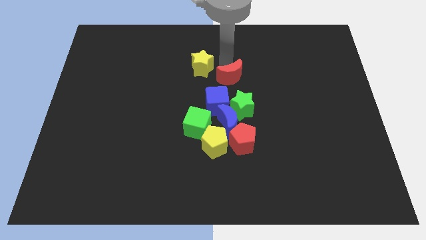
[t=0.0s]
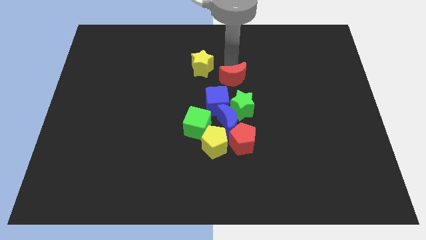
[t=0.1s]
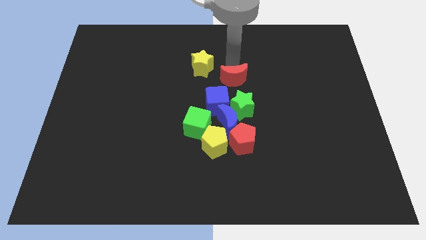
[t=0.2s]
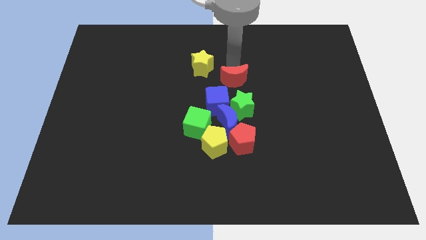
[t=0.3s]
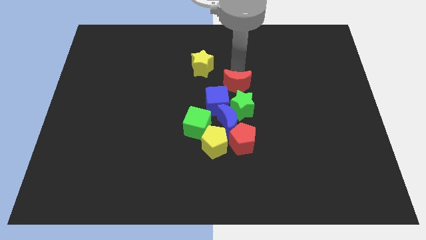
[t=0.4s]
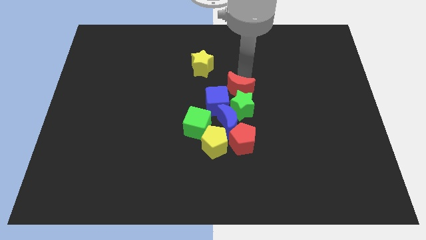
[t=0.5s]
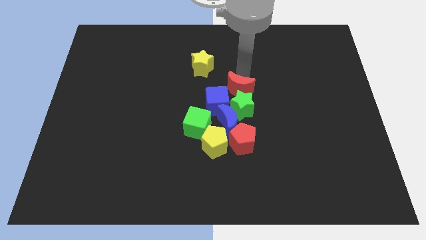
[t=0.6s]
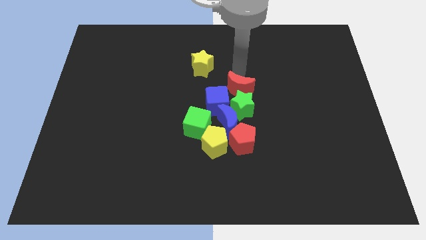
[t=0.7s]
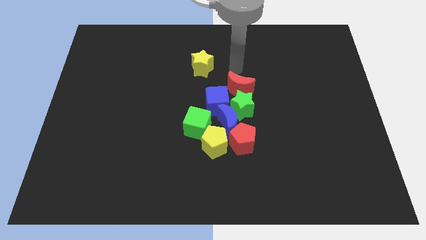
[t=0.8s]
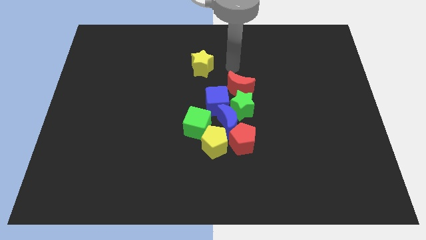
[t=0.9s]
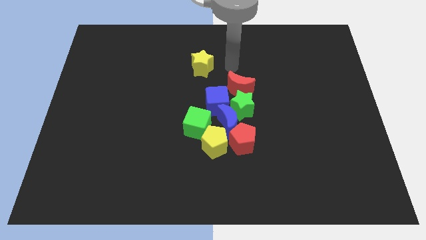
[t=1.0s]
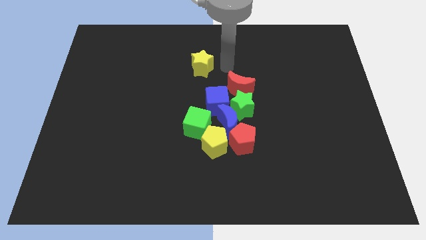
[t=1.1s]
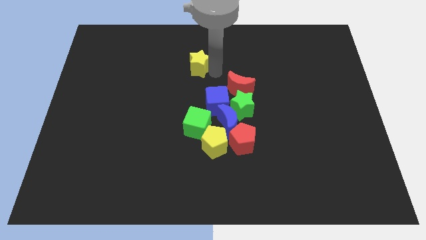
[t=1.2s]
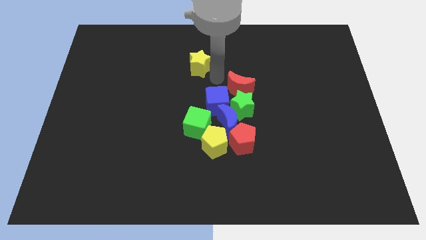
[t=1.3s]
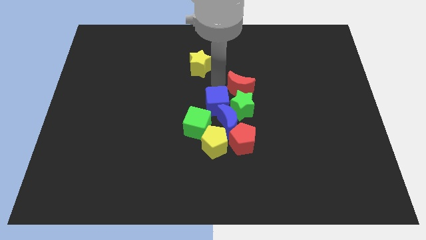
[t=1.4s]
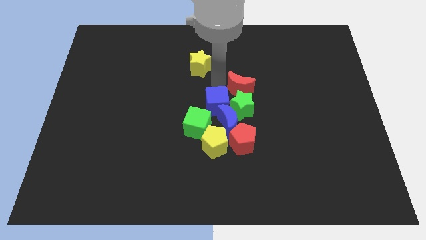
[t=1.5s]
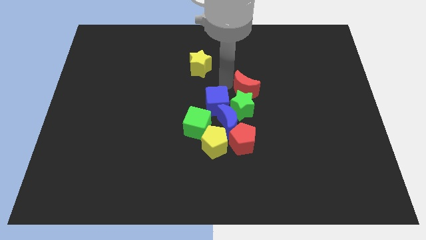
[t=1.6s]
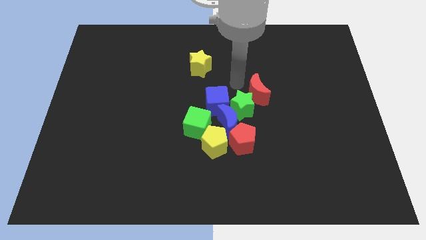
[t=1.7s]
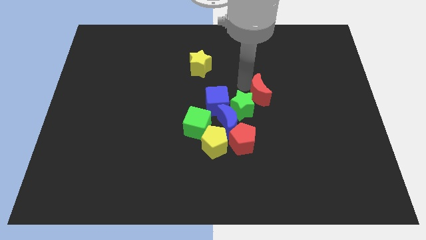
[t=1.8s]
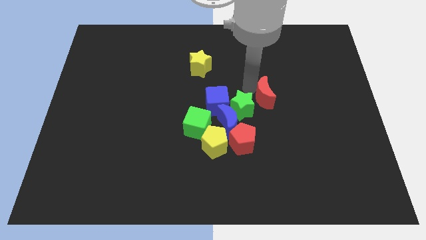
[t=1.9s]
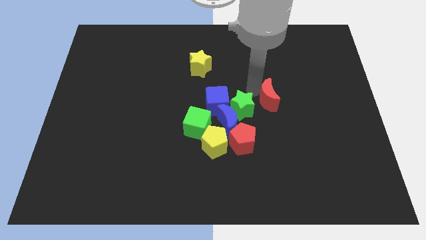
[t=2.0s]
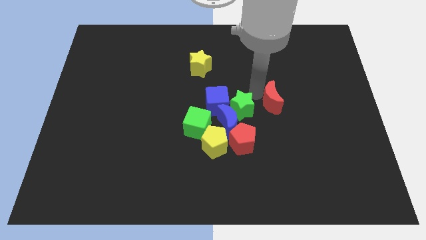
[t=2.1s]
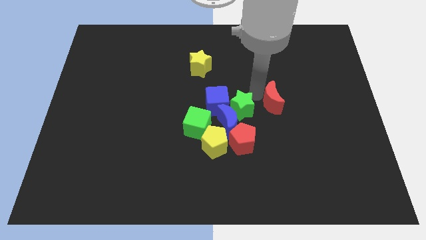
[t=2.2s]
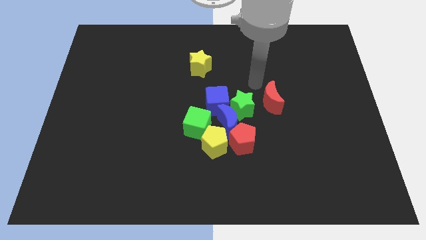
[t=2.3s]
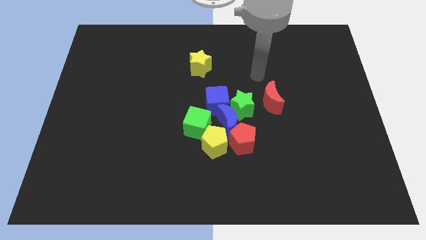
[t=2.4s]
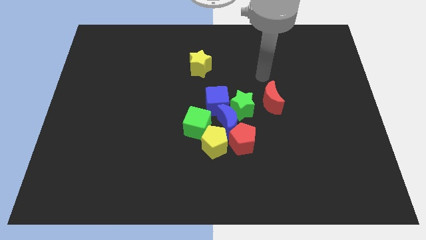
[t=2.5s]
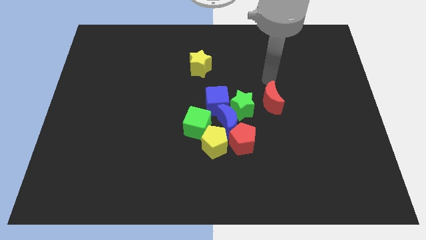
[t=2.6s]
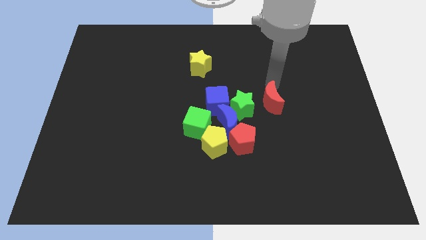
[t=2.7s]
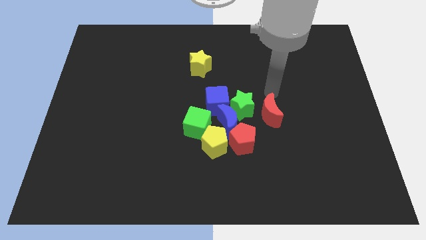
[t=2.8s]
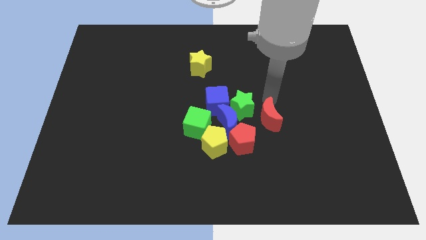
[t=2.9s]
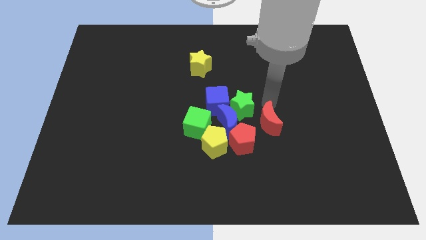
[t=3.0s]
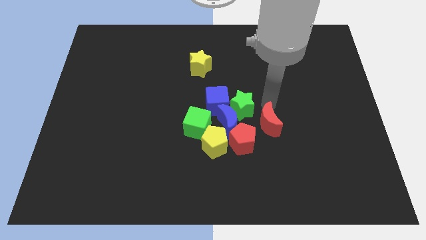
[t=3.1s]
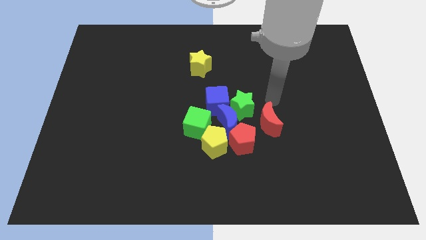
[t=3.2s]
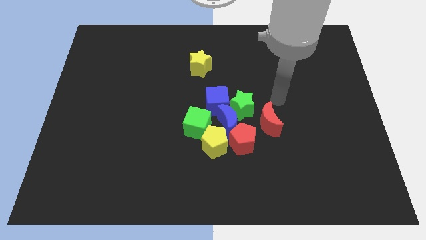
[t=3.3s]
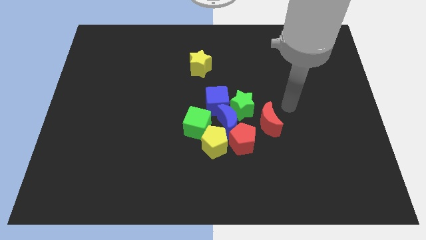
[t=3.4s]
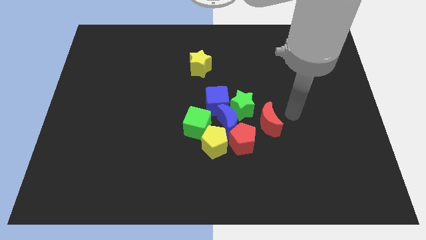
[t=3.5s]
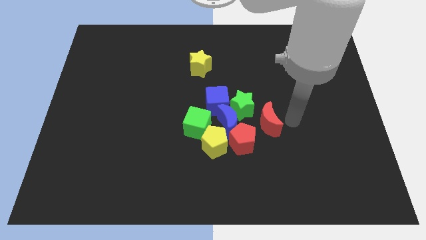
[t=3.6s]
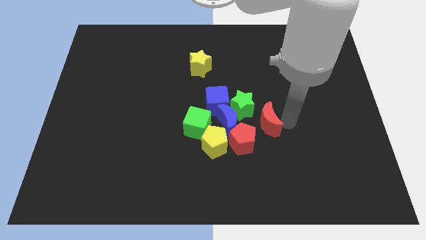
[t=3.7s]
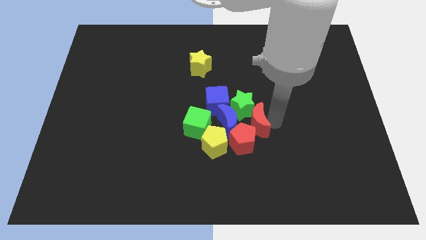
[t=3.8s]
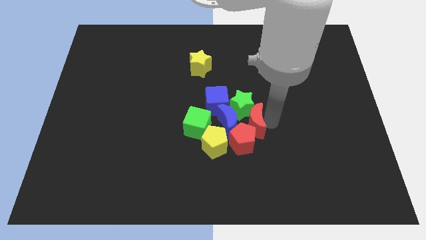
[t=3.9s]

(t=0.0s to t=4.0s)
push the red crescent to the right of the red pentagon

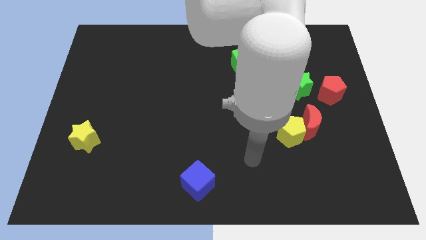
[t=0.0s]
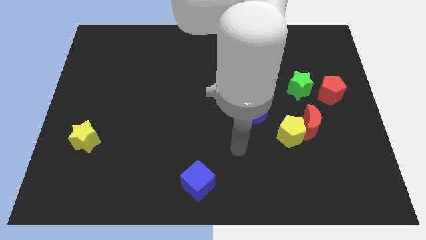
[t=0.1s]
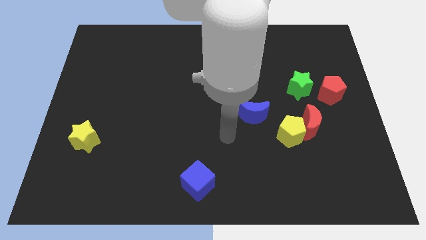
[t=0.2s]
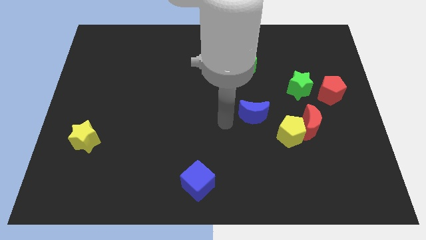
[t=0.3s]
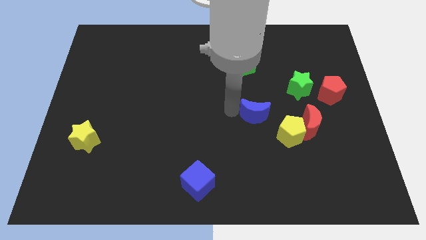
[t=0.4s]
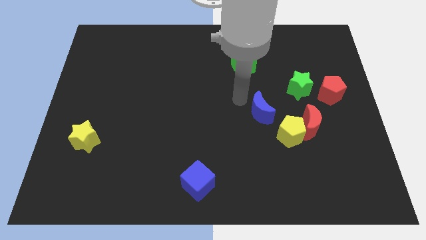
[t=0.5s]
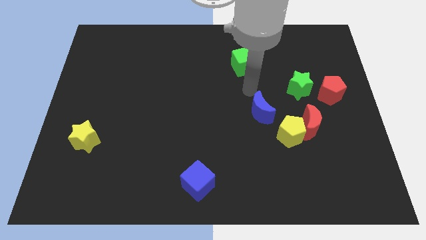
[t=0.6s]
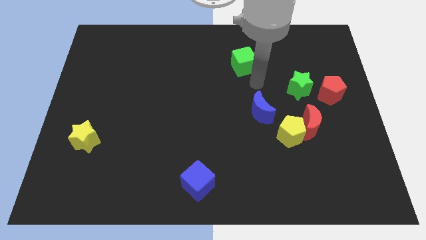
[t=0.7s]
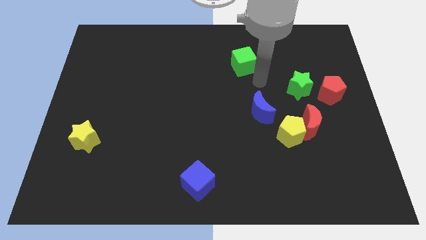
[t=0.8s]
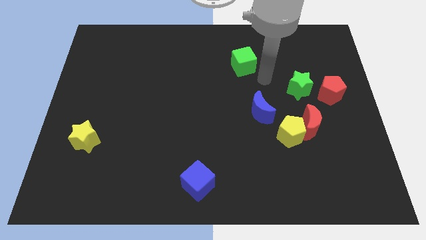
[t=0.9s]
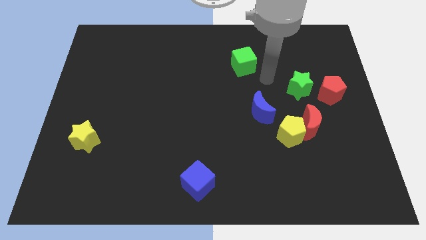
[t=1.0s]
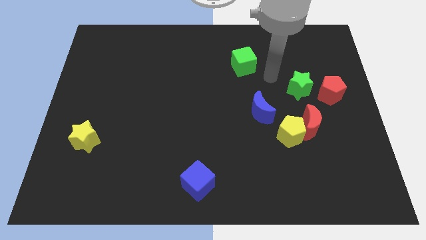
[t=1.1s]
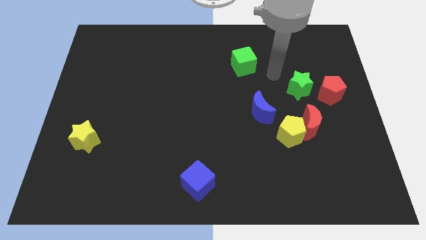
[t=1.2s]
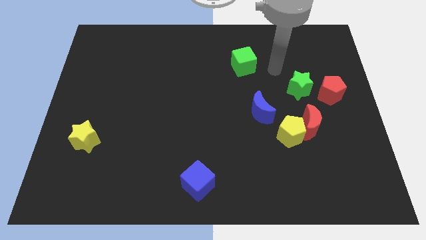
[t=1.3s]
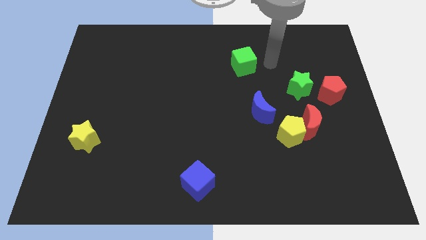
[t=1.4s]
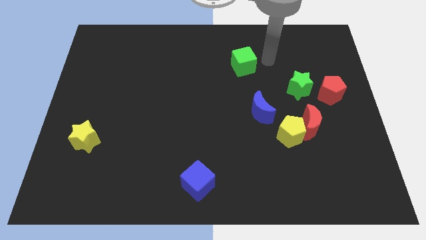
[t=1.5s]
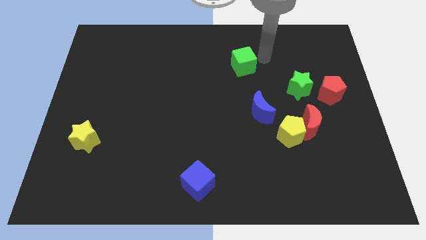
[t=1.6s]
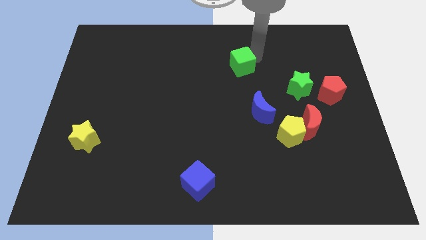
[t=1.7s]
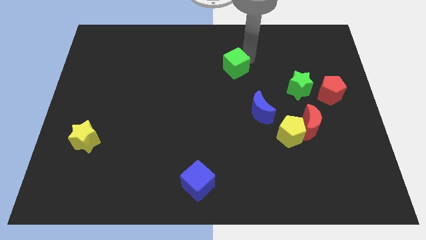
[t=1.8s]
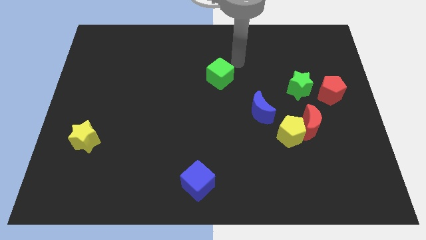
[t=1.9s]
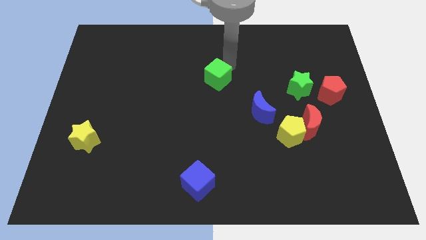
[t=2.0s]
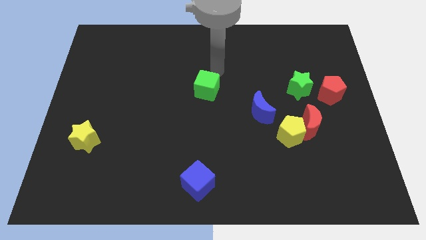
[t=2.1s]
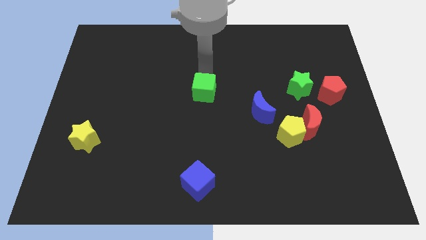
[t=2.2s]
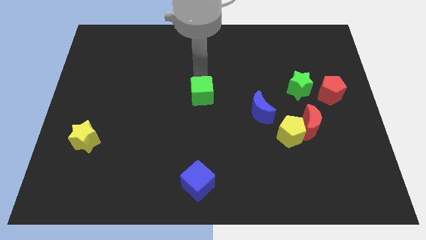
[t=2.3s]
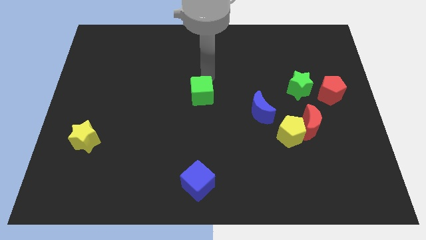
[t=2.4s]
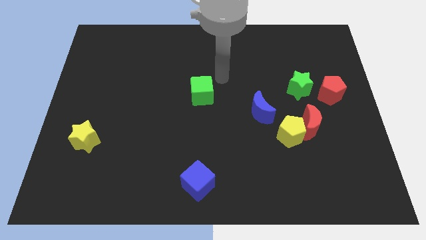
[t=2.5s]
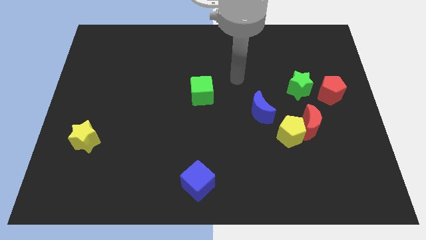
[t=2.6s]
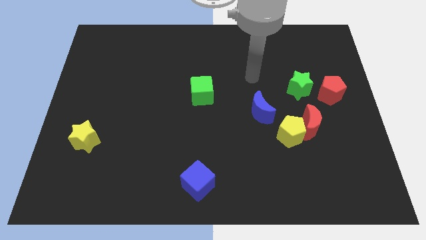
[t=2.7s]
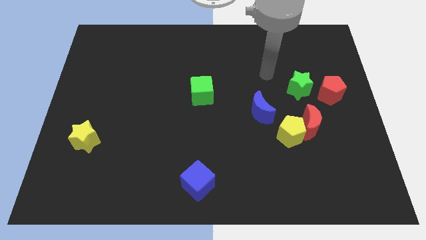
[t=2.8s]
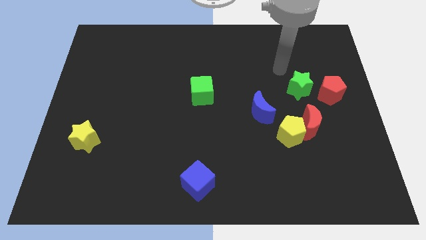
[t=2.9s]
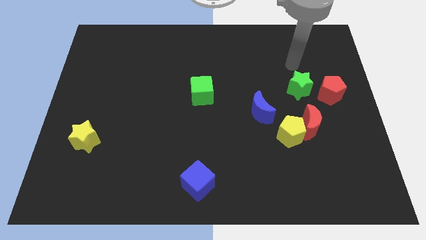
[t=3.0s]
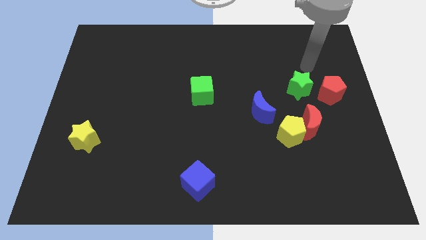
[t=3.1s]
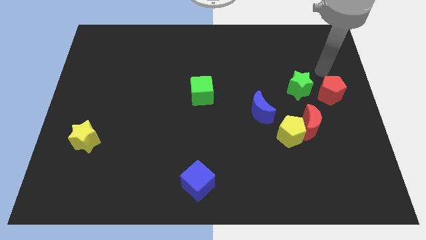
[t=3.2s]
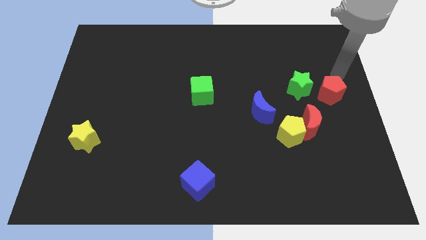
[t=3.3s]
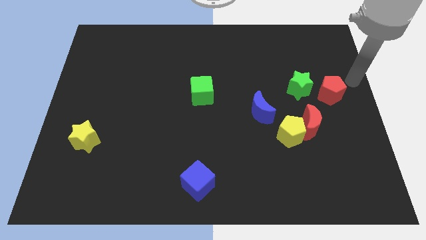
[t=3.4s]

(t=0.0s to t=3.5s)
push the green cube parallel left to the green star

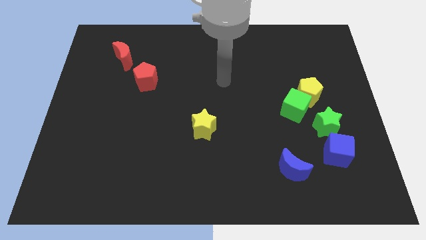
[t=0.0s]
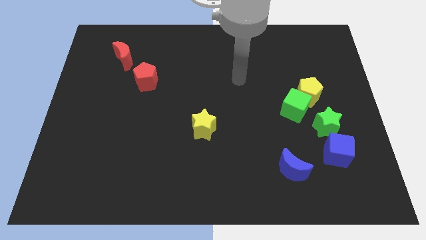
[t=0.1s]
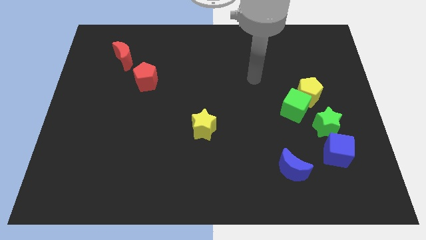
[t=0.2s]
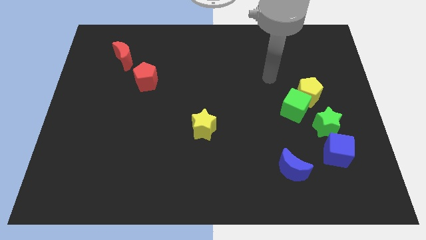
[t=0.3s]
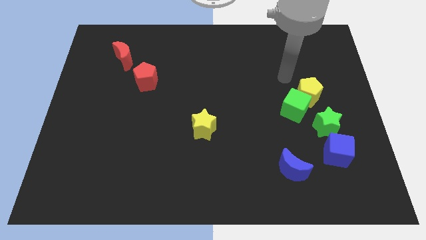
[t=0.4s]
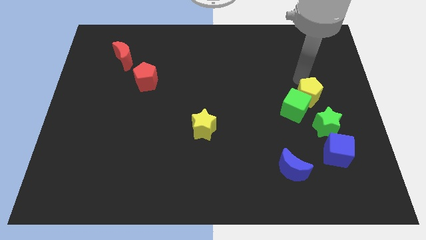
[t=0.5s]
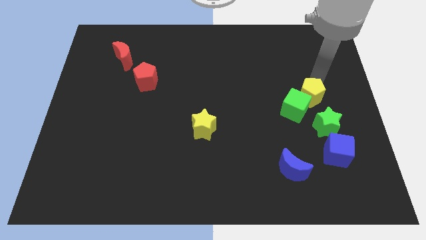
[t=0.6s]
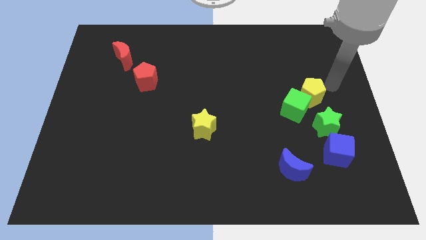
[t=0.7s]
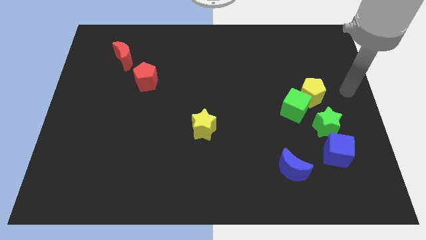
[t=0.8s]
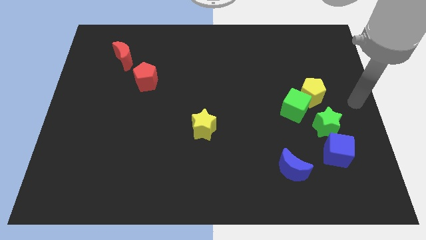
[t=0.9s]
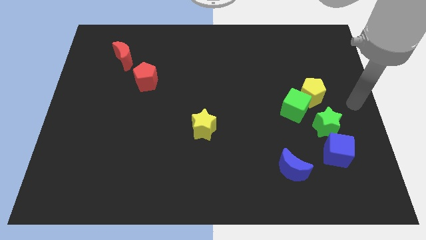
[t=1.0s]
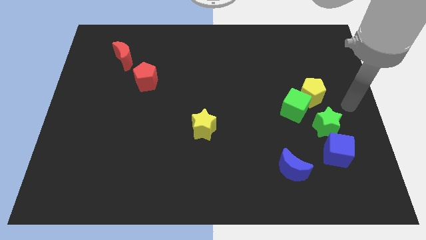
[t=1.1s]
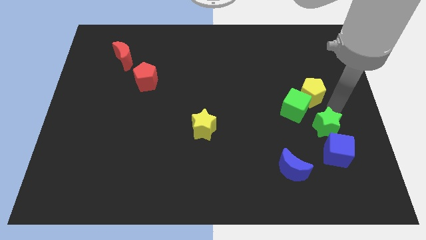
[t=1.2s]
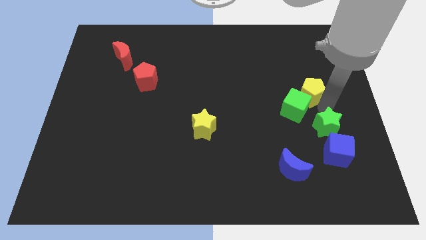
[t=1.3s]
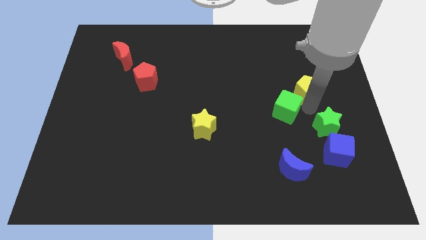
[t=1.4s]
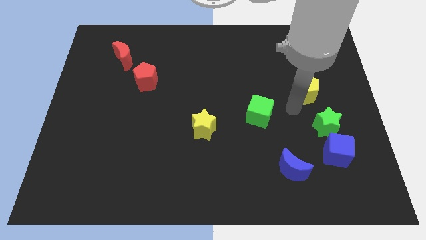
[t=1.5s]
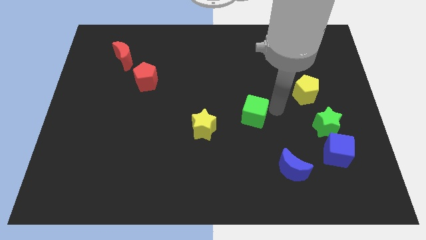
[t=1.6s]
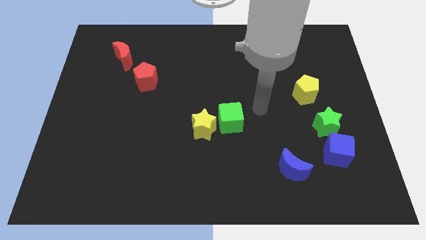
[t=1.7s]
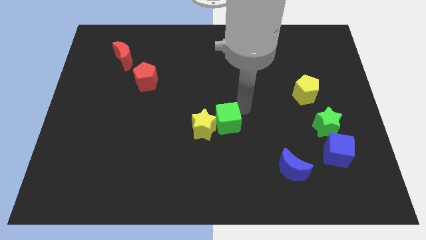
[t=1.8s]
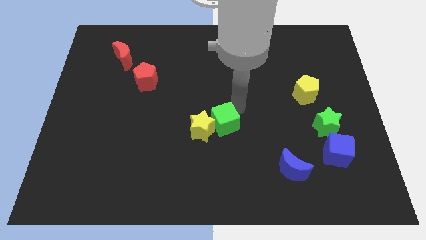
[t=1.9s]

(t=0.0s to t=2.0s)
move green cube close to yellow star
